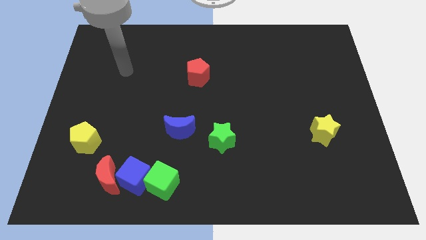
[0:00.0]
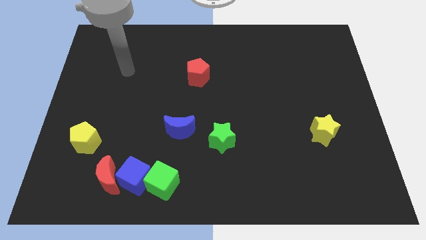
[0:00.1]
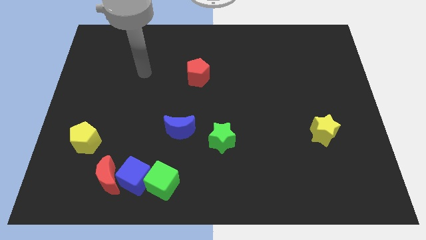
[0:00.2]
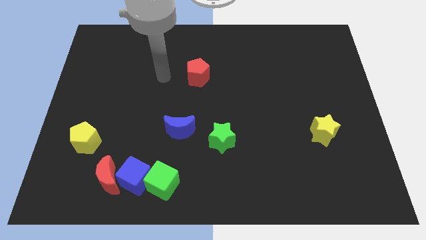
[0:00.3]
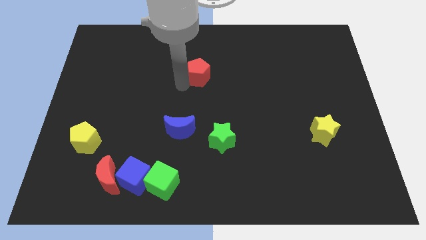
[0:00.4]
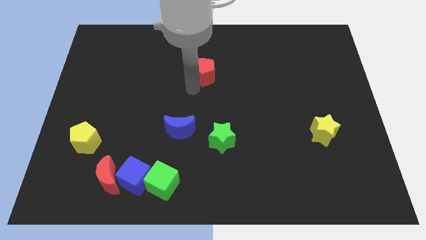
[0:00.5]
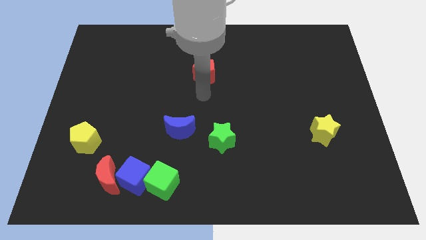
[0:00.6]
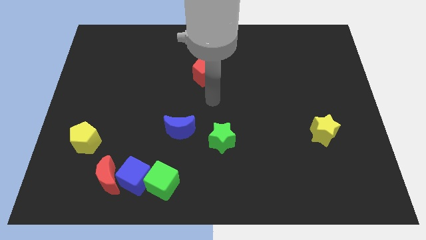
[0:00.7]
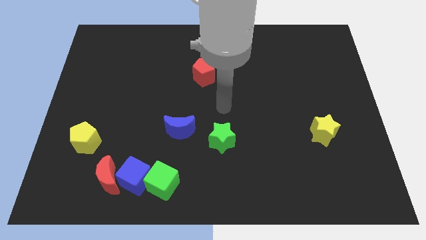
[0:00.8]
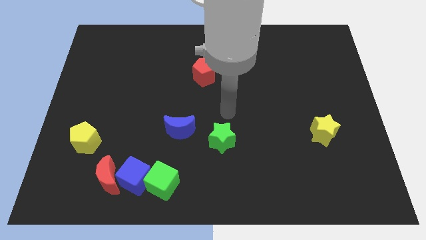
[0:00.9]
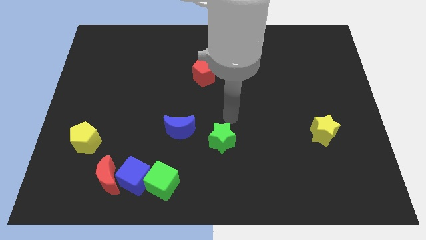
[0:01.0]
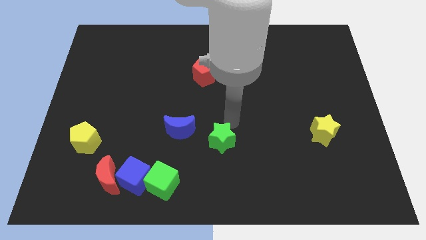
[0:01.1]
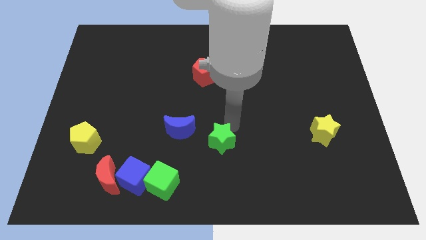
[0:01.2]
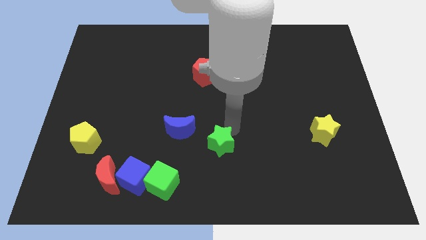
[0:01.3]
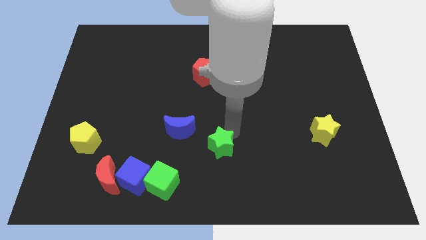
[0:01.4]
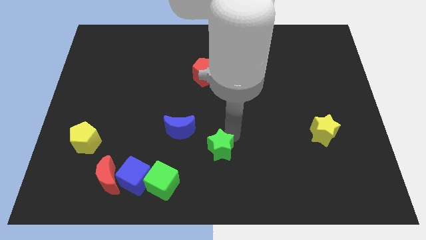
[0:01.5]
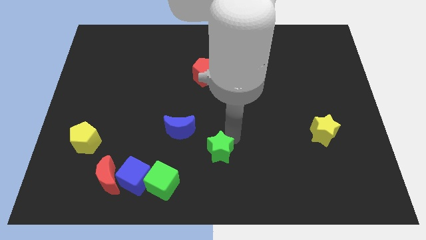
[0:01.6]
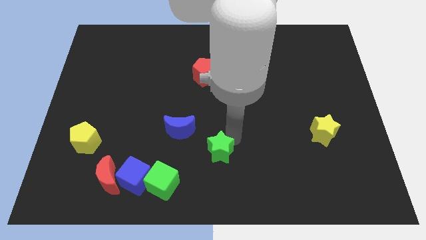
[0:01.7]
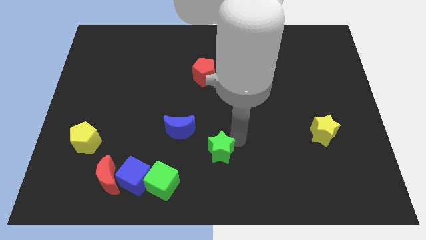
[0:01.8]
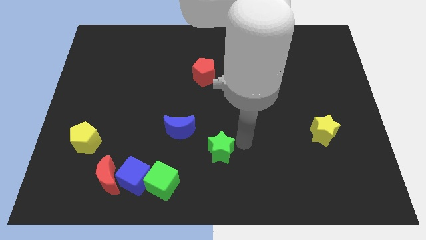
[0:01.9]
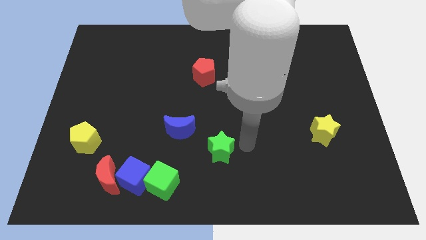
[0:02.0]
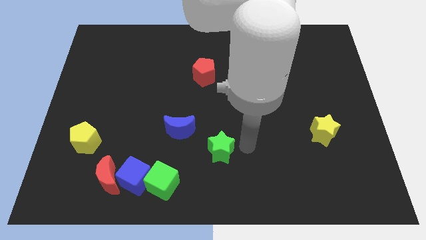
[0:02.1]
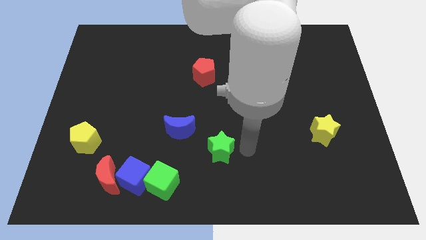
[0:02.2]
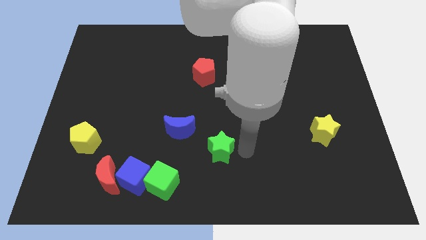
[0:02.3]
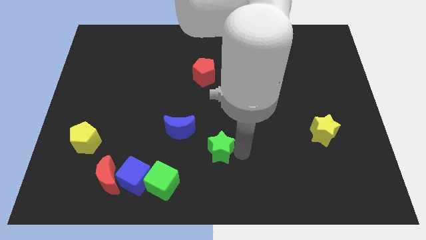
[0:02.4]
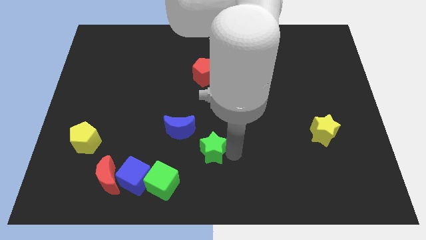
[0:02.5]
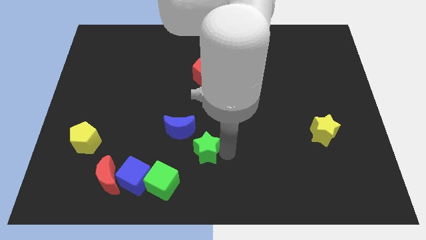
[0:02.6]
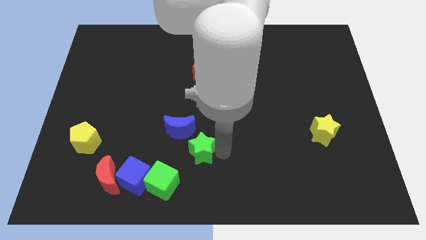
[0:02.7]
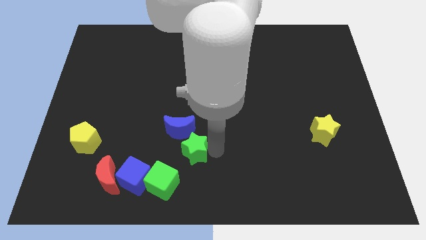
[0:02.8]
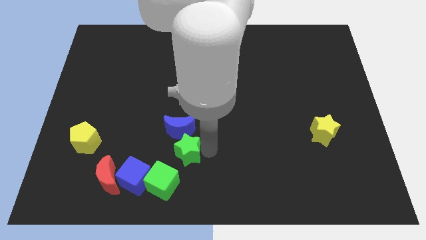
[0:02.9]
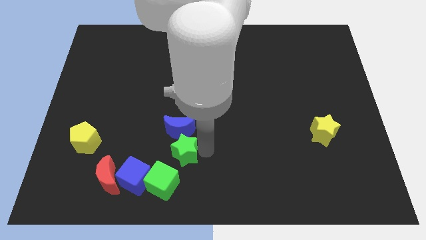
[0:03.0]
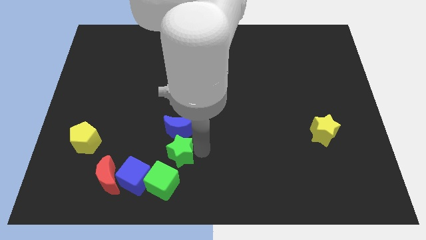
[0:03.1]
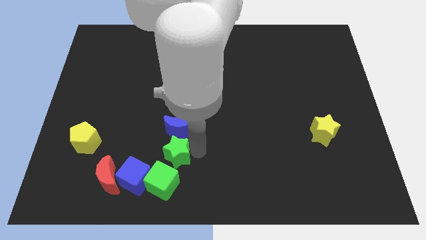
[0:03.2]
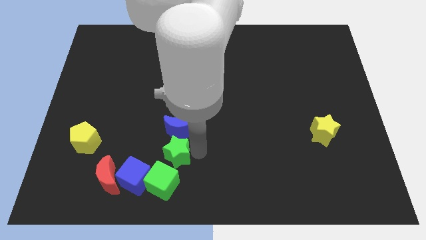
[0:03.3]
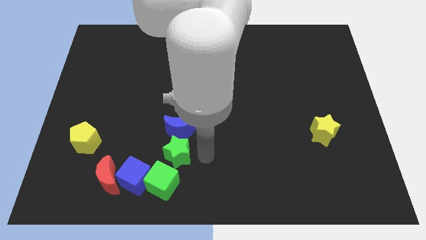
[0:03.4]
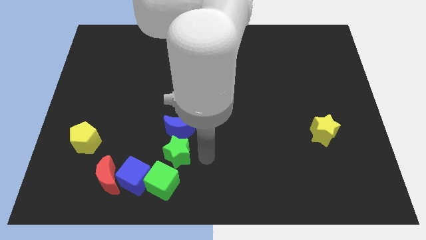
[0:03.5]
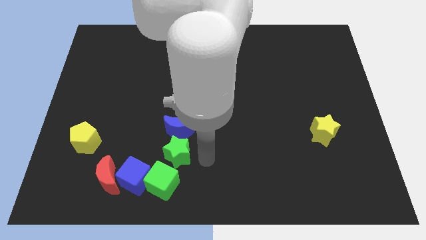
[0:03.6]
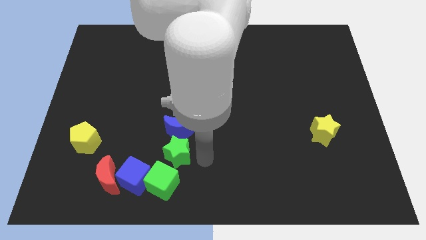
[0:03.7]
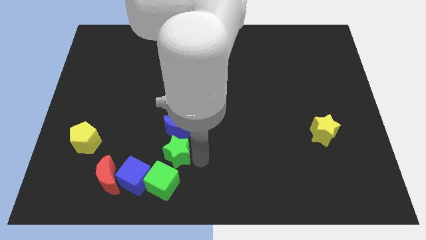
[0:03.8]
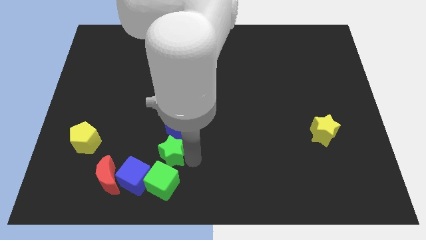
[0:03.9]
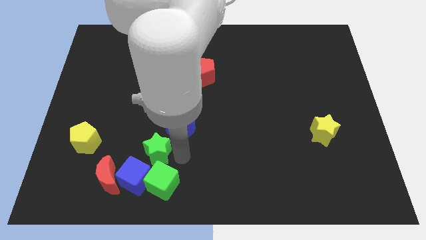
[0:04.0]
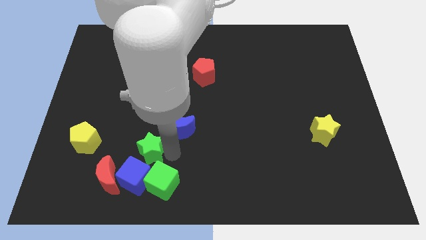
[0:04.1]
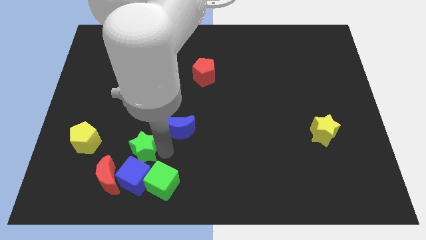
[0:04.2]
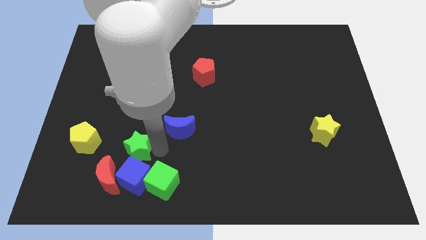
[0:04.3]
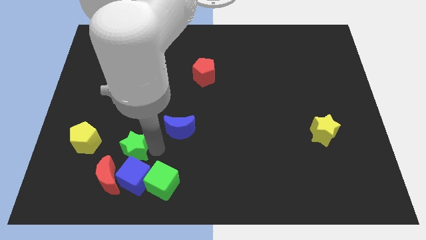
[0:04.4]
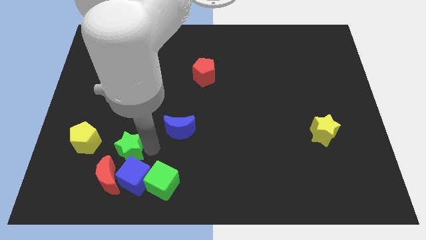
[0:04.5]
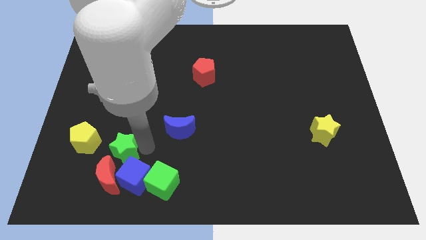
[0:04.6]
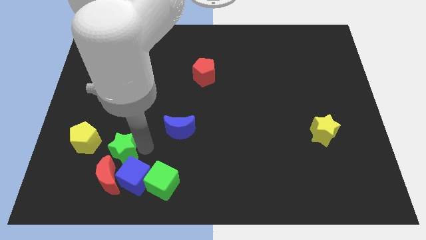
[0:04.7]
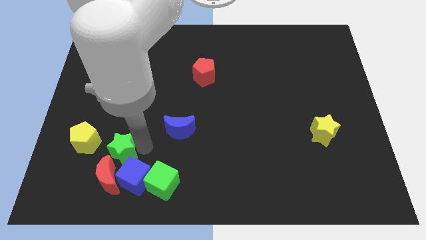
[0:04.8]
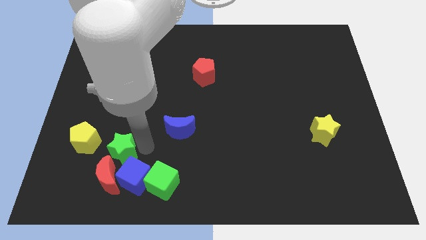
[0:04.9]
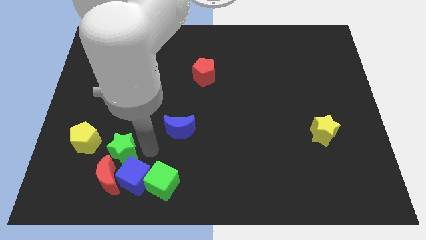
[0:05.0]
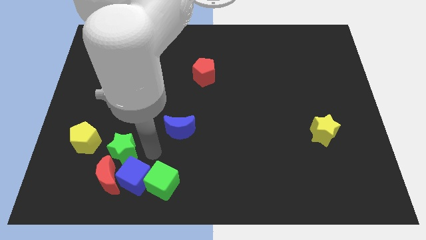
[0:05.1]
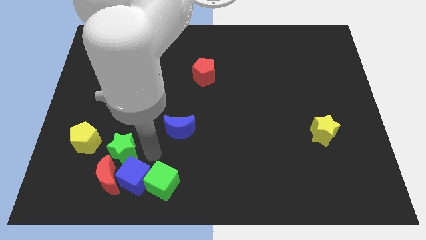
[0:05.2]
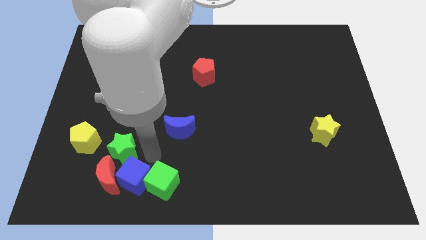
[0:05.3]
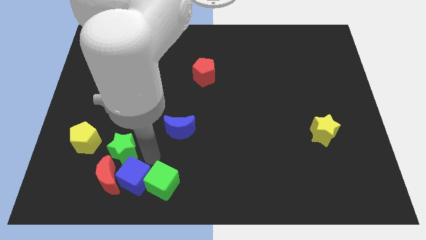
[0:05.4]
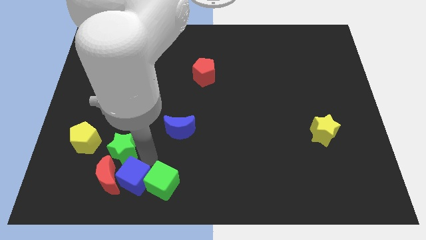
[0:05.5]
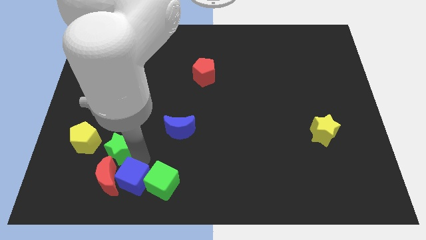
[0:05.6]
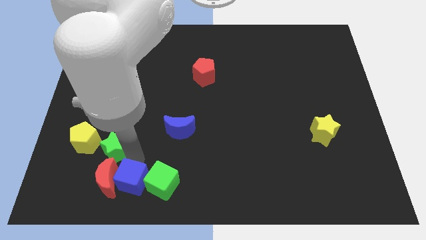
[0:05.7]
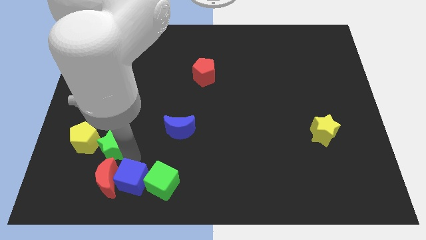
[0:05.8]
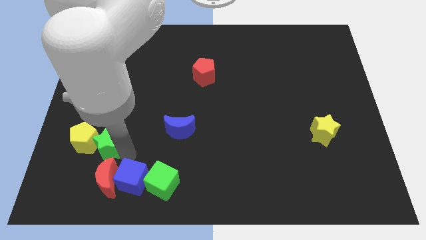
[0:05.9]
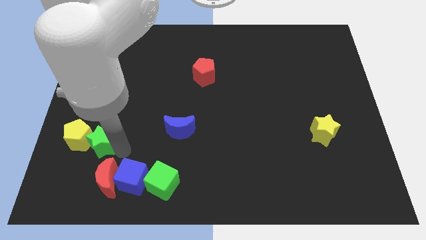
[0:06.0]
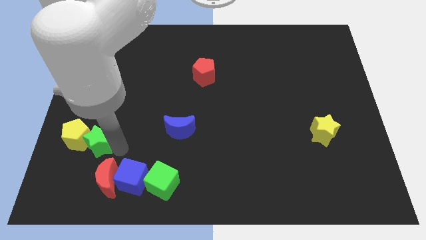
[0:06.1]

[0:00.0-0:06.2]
put the green star to the yellow pentagon

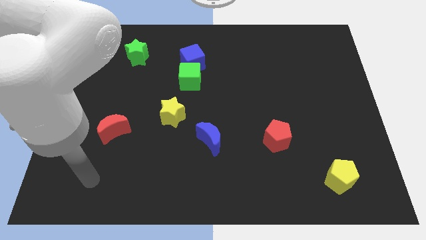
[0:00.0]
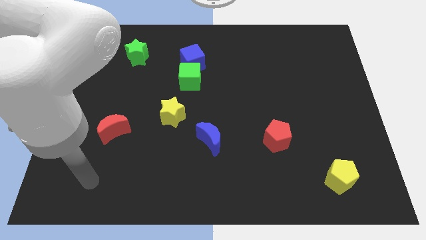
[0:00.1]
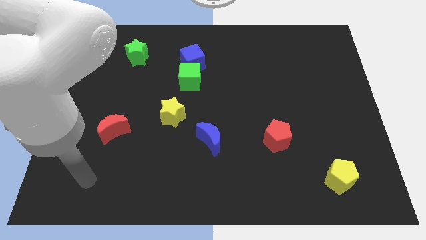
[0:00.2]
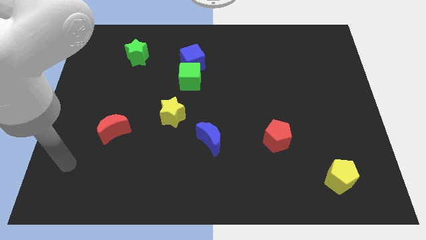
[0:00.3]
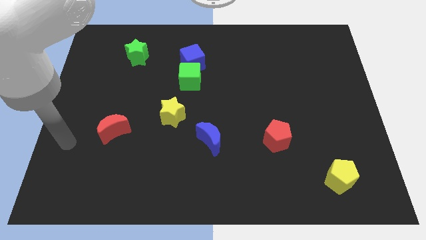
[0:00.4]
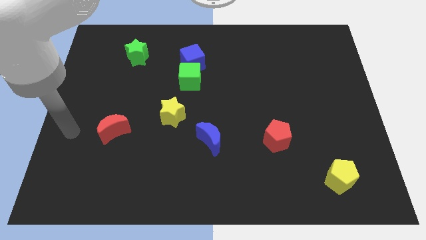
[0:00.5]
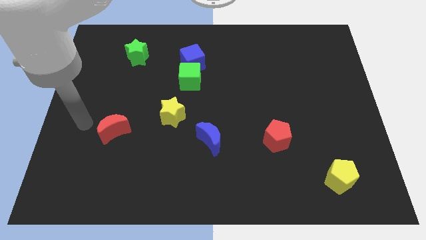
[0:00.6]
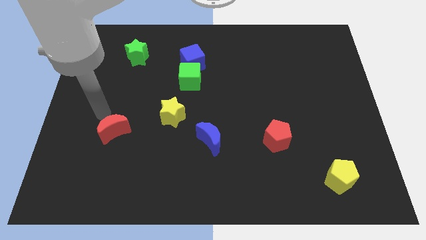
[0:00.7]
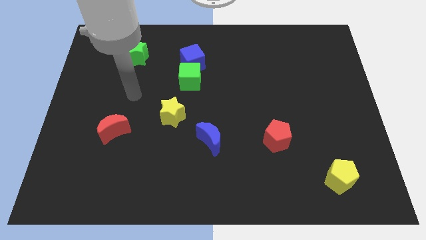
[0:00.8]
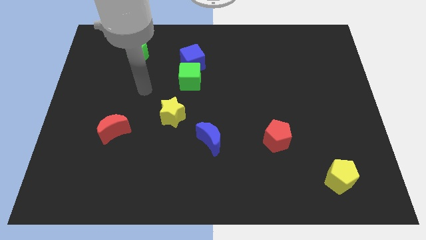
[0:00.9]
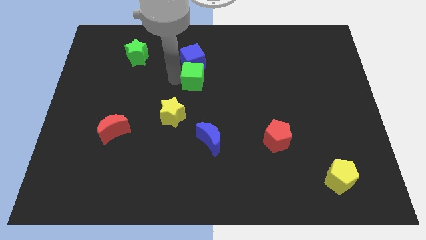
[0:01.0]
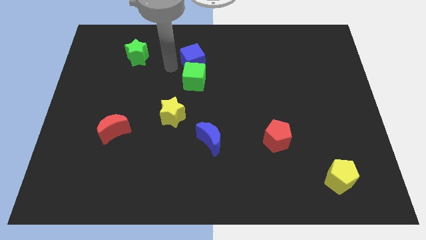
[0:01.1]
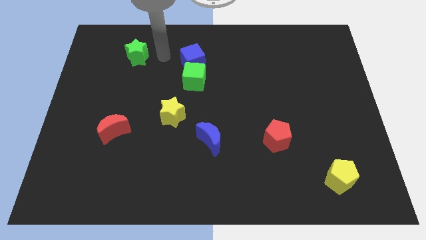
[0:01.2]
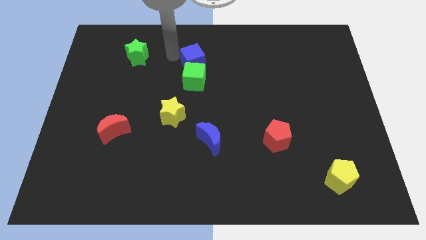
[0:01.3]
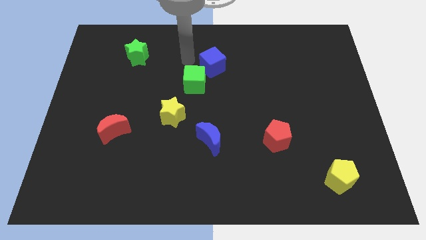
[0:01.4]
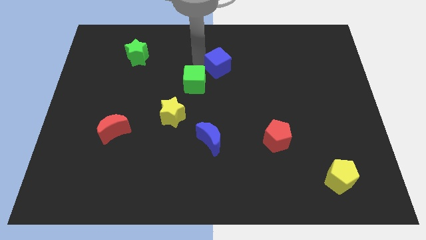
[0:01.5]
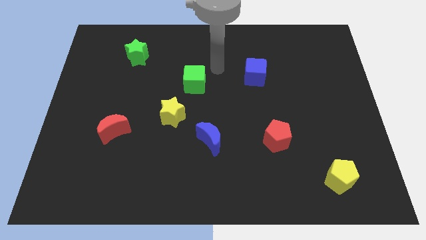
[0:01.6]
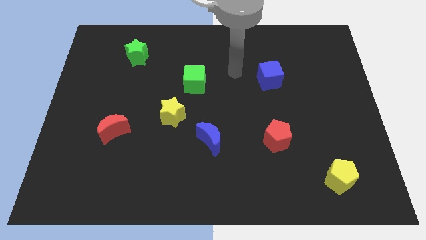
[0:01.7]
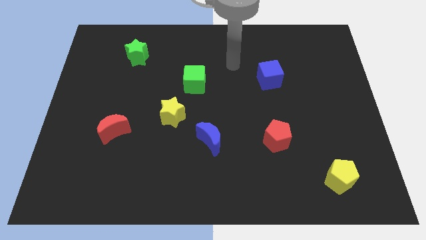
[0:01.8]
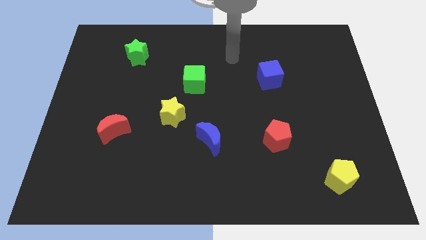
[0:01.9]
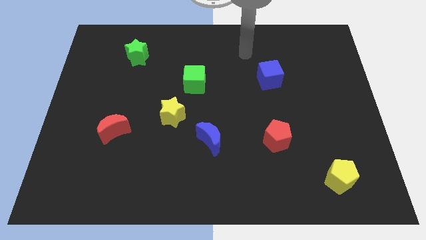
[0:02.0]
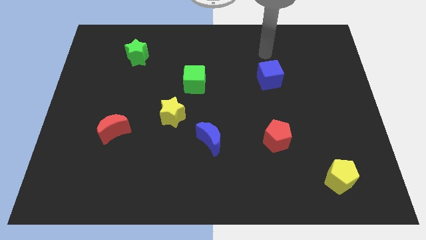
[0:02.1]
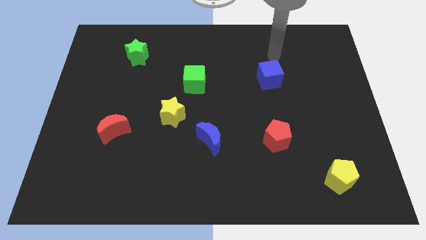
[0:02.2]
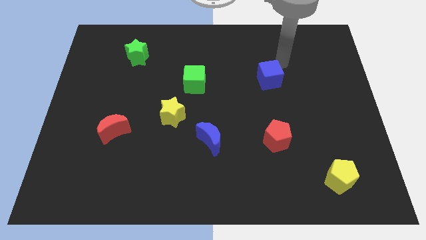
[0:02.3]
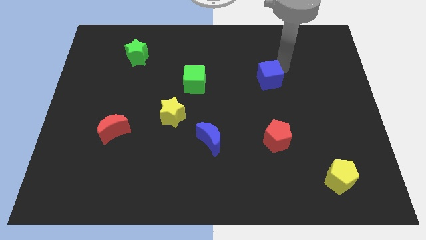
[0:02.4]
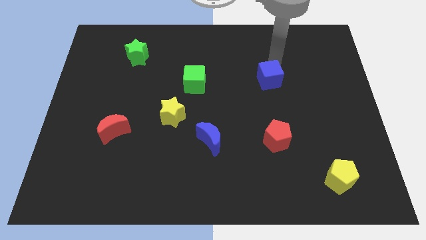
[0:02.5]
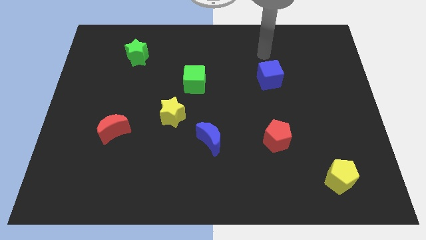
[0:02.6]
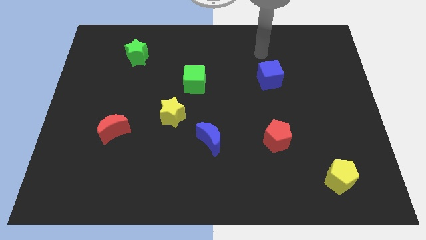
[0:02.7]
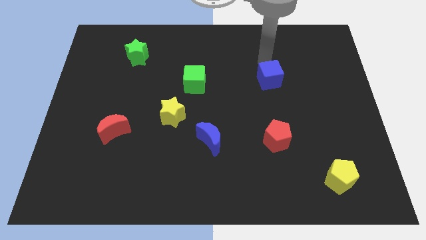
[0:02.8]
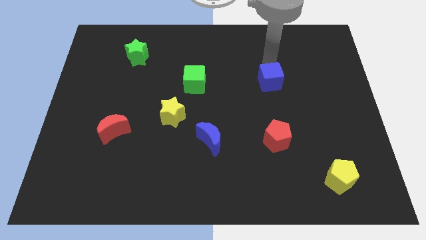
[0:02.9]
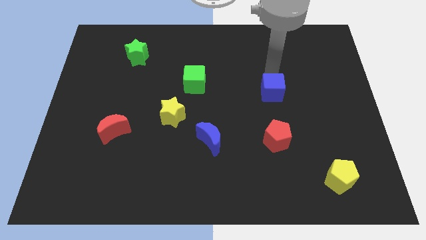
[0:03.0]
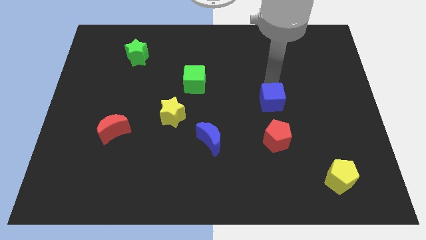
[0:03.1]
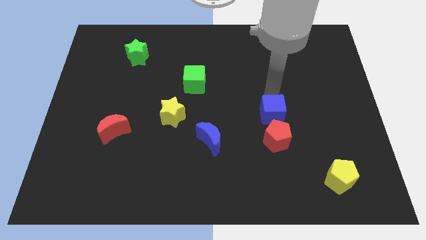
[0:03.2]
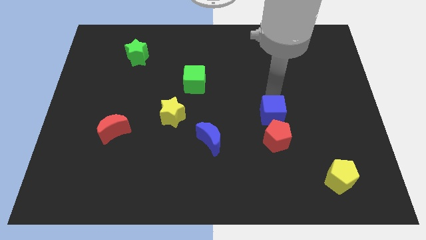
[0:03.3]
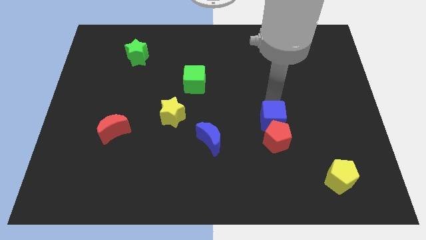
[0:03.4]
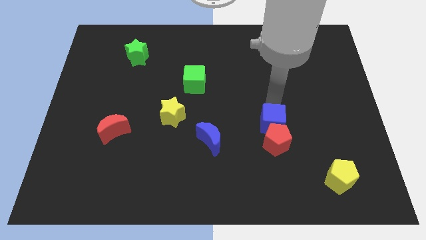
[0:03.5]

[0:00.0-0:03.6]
slide the blue cube towards the red pentagon
